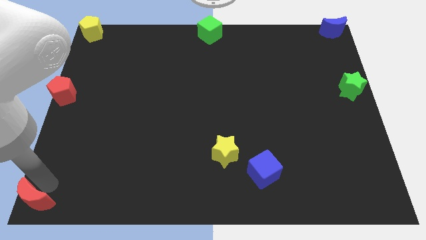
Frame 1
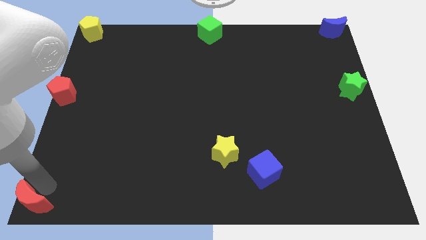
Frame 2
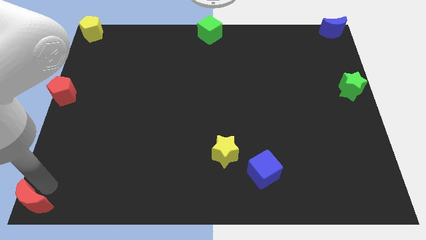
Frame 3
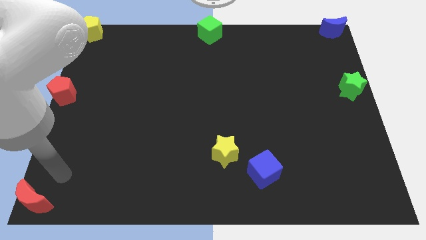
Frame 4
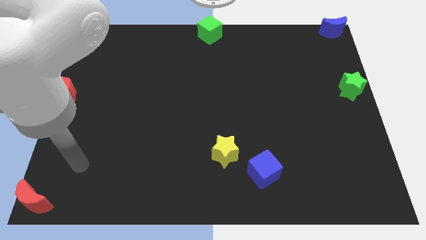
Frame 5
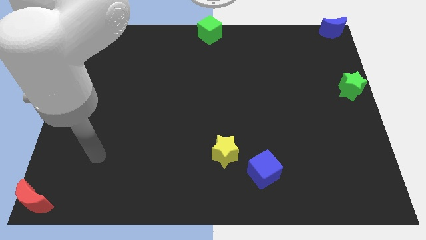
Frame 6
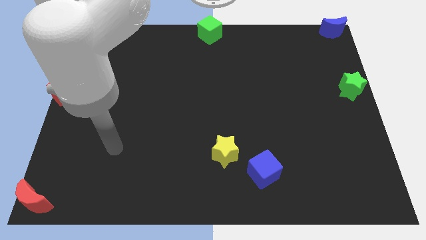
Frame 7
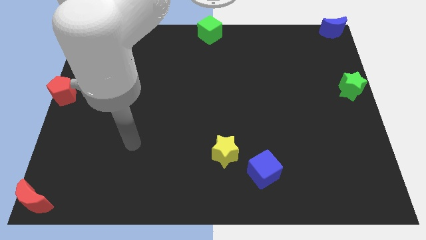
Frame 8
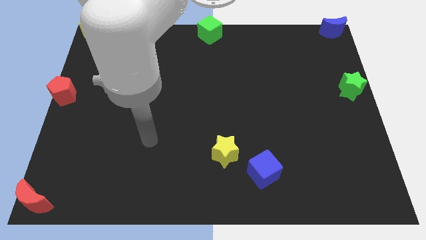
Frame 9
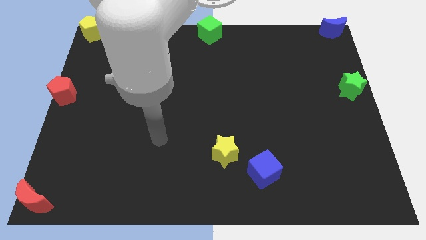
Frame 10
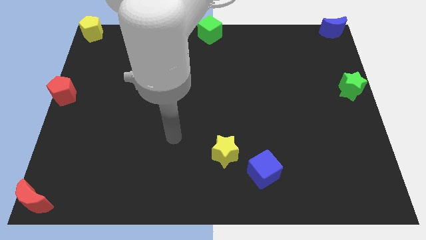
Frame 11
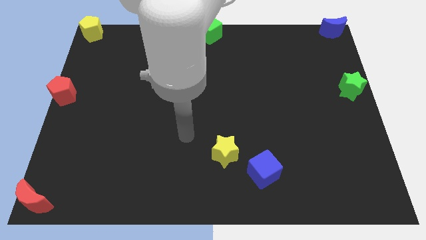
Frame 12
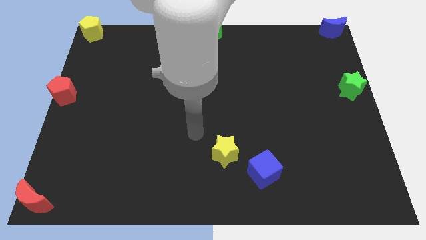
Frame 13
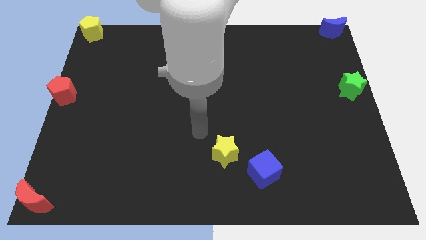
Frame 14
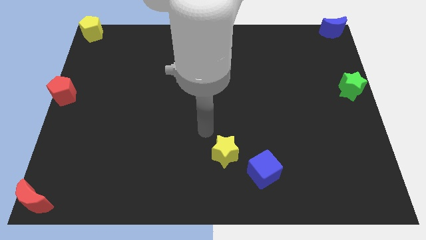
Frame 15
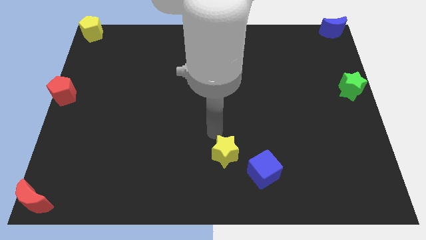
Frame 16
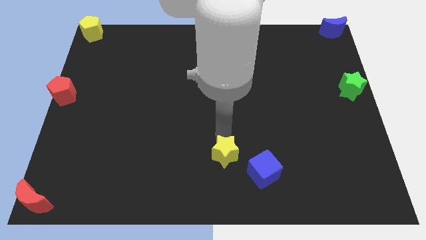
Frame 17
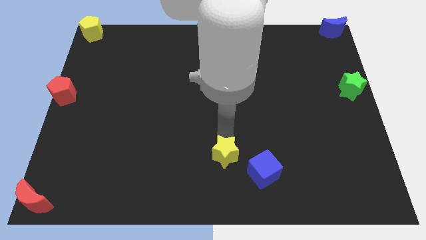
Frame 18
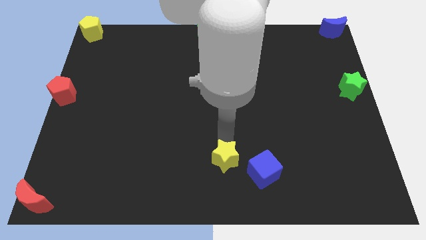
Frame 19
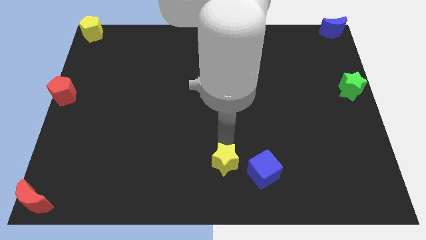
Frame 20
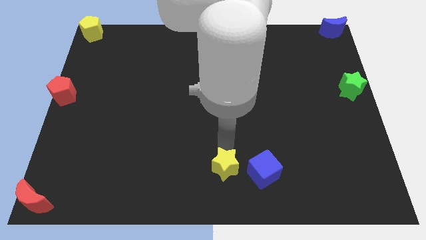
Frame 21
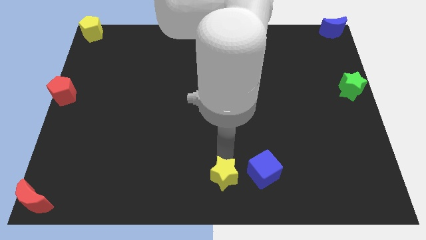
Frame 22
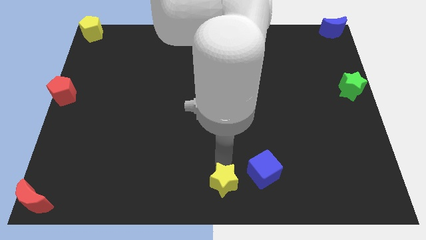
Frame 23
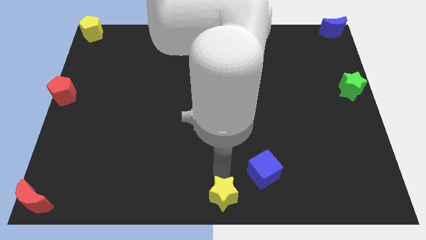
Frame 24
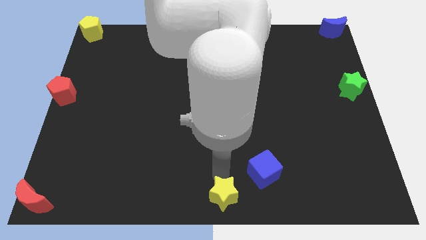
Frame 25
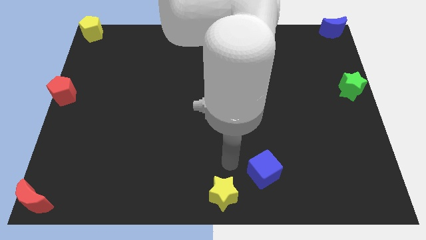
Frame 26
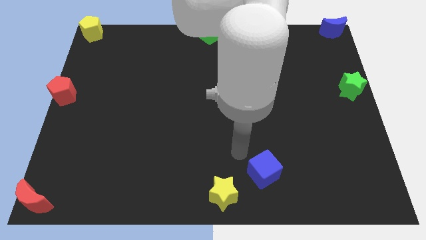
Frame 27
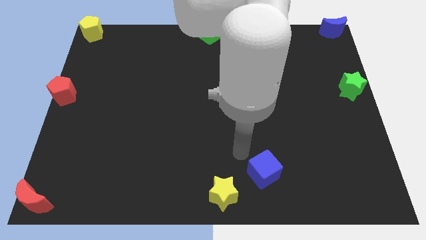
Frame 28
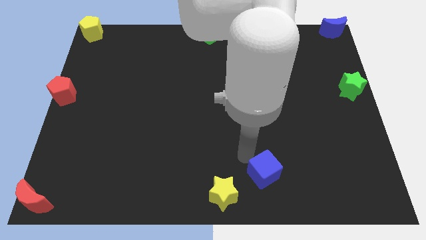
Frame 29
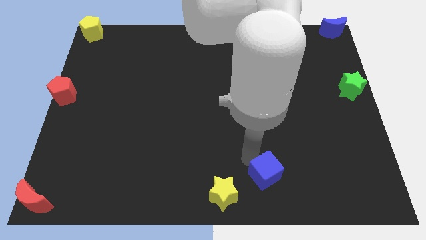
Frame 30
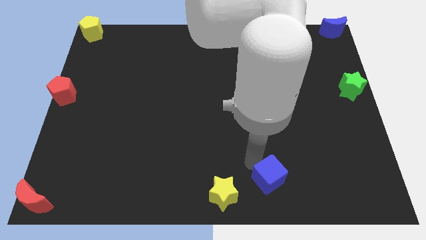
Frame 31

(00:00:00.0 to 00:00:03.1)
slide the yellow star to the bottom center of the board

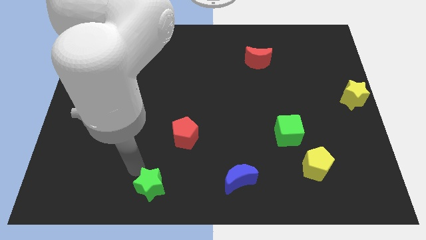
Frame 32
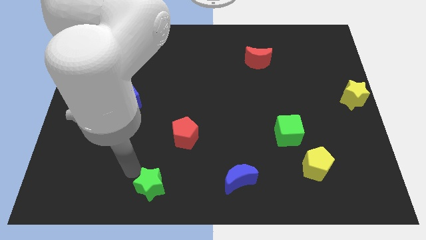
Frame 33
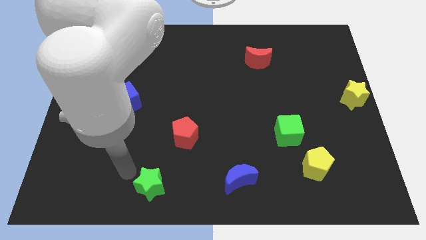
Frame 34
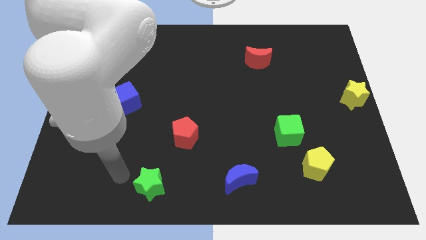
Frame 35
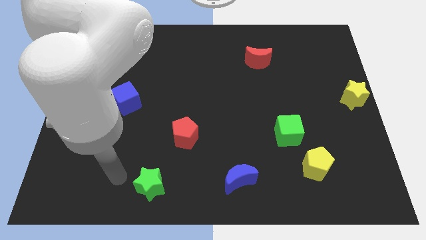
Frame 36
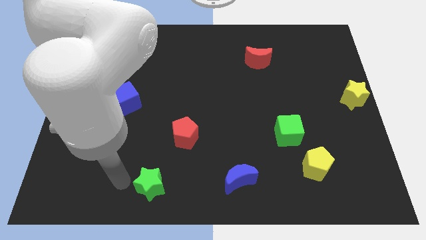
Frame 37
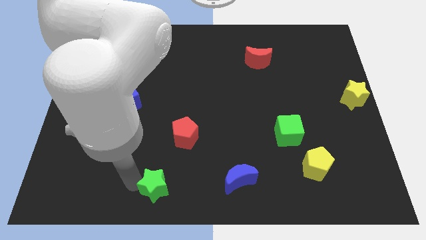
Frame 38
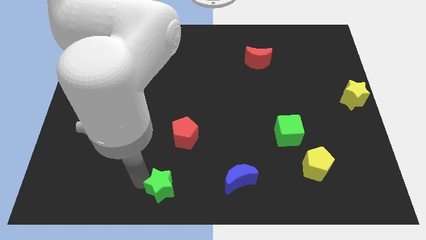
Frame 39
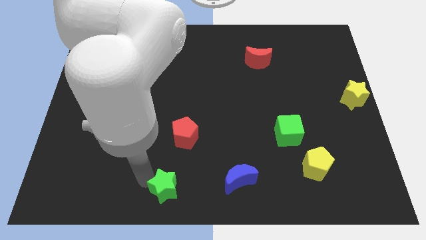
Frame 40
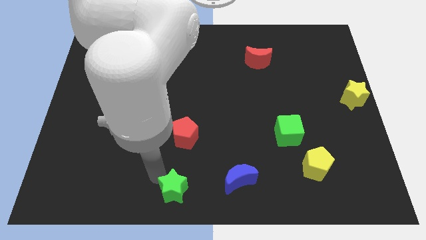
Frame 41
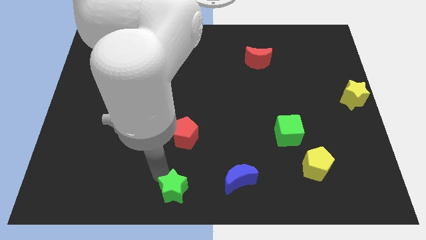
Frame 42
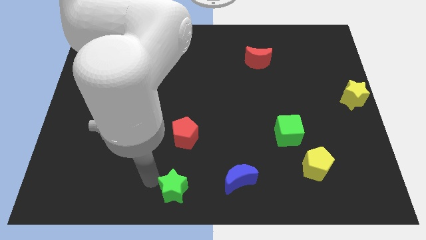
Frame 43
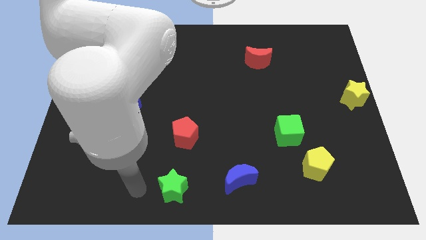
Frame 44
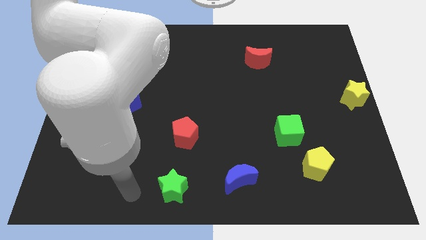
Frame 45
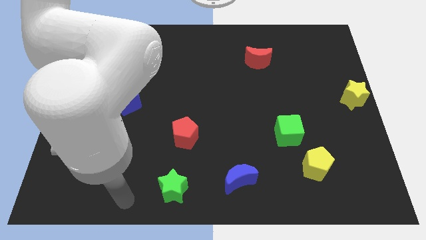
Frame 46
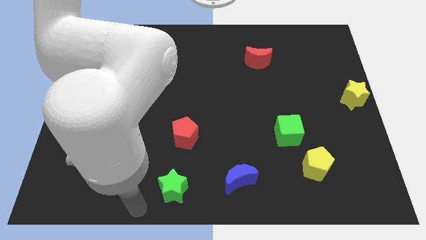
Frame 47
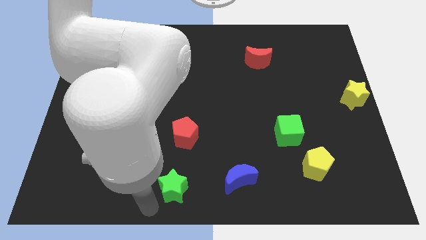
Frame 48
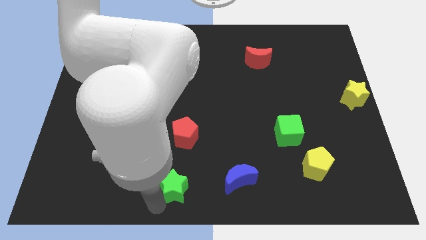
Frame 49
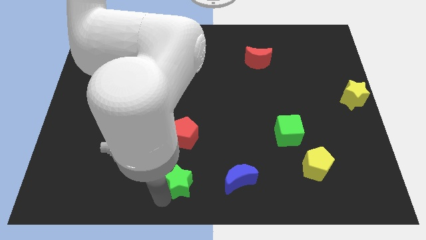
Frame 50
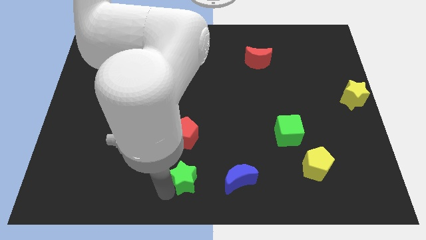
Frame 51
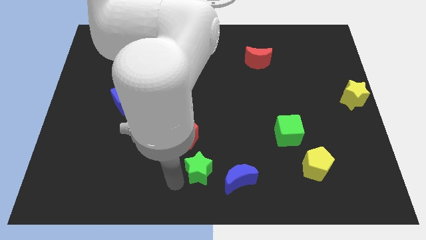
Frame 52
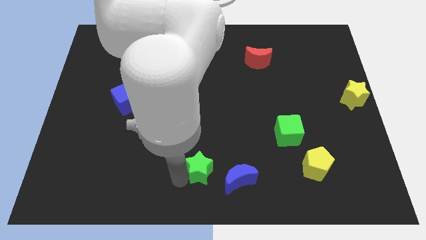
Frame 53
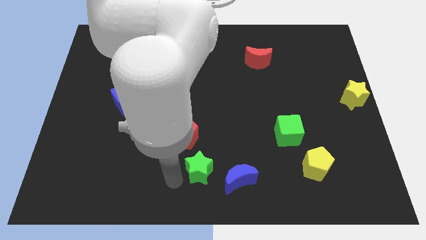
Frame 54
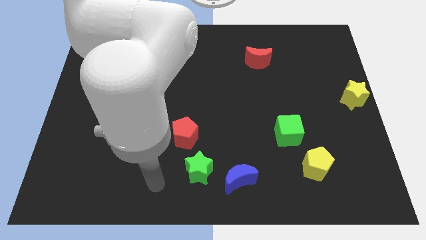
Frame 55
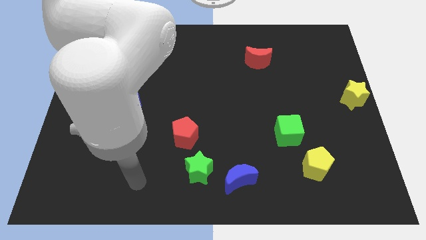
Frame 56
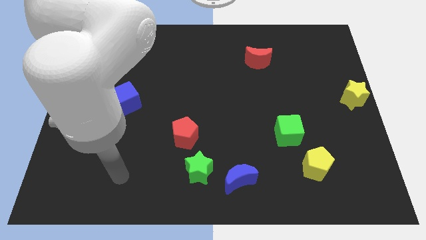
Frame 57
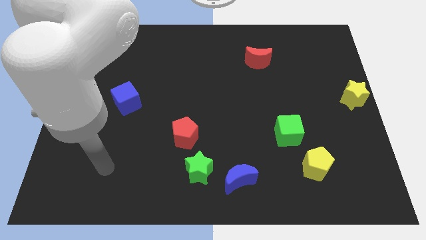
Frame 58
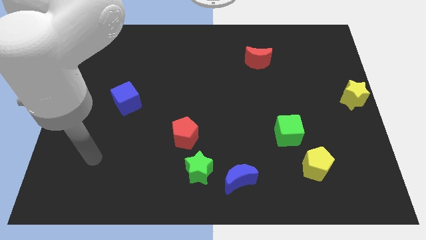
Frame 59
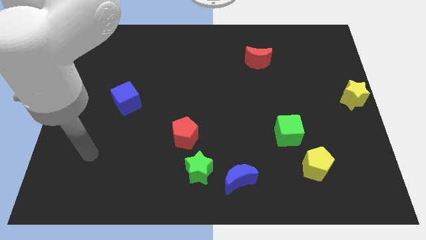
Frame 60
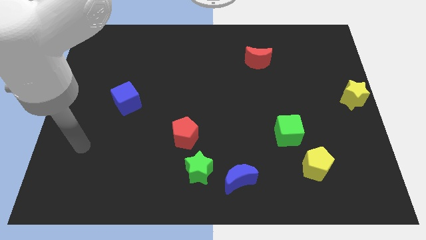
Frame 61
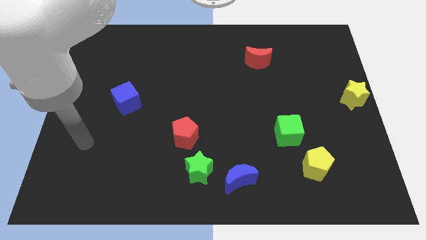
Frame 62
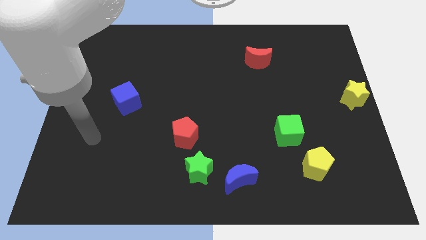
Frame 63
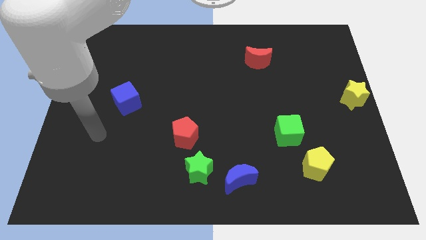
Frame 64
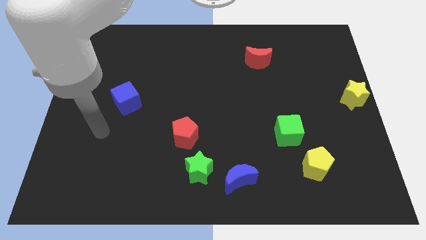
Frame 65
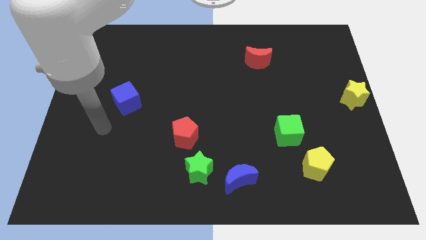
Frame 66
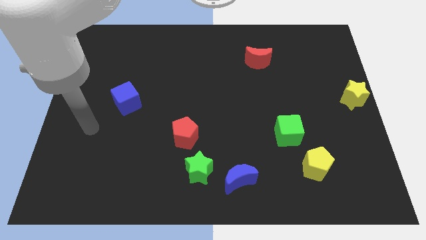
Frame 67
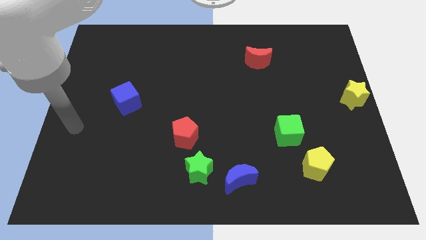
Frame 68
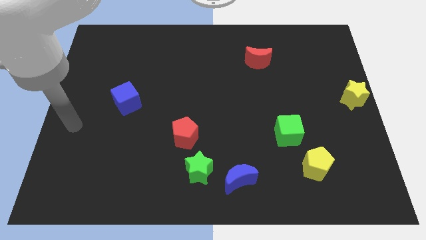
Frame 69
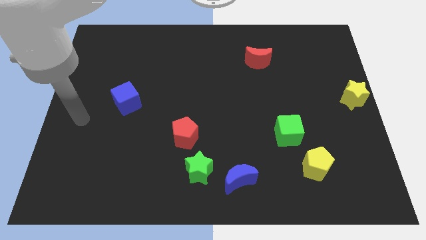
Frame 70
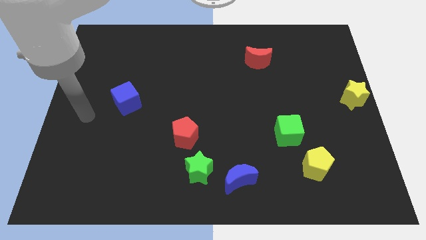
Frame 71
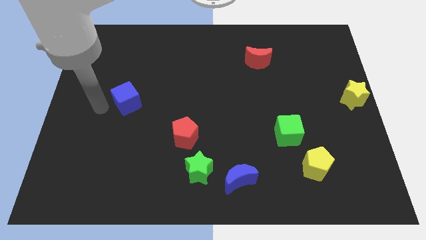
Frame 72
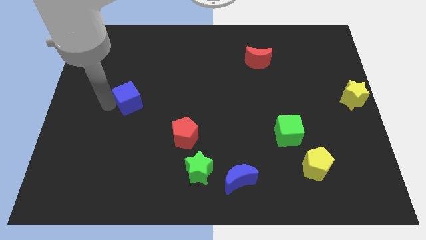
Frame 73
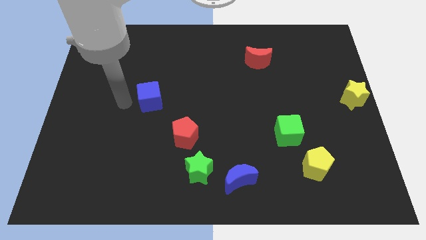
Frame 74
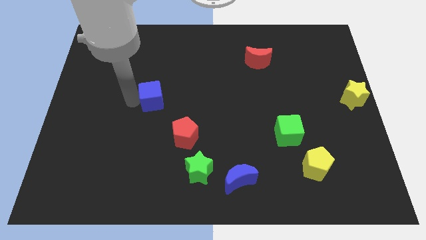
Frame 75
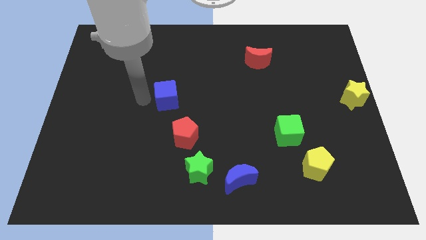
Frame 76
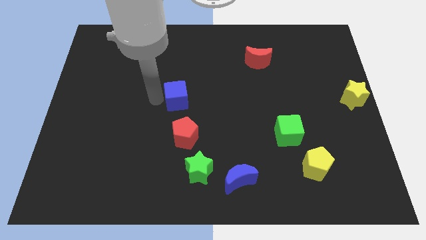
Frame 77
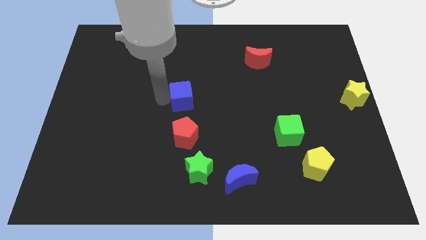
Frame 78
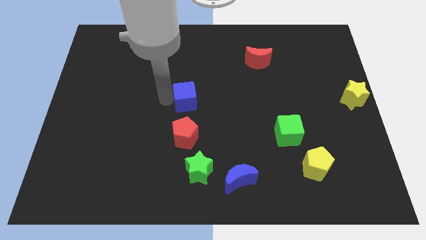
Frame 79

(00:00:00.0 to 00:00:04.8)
place the green star underneath the red pentagon

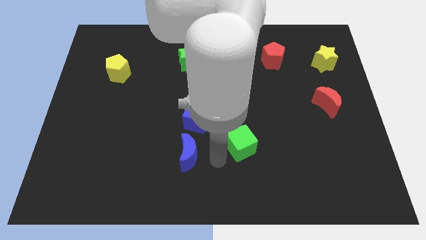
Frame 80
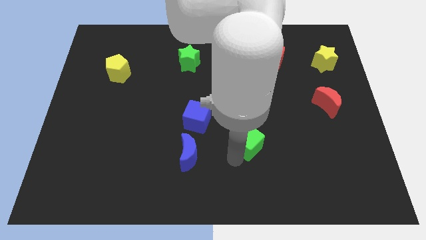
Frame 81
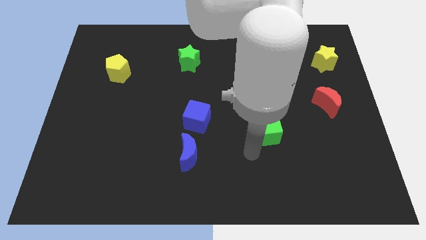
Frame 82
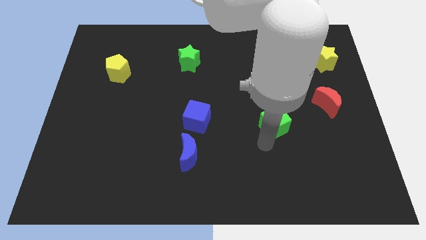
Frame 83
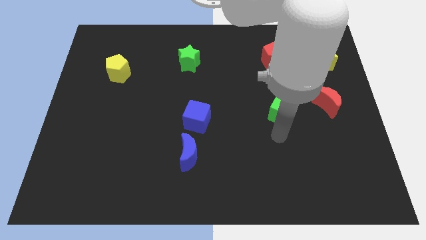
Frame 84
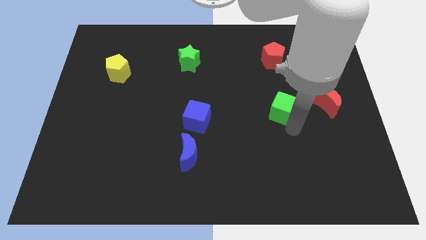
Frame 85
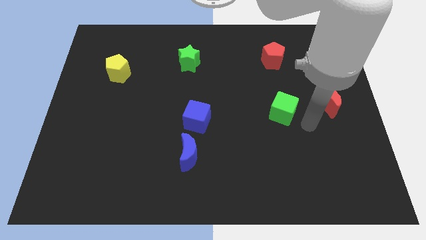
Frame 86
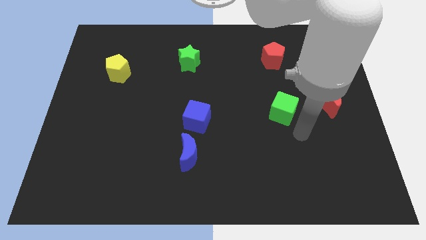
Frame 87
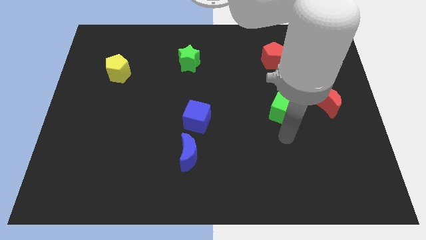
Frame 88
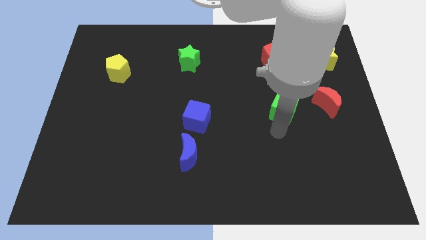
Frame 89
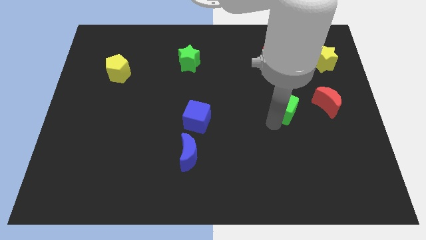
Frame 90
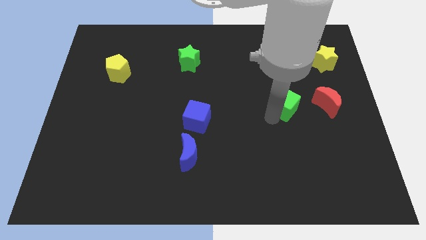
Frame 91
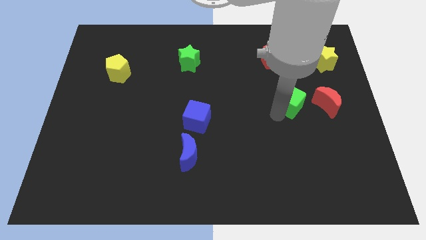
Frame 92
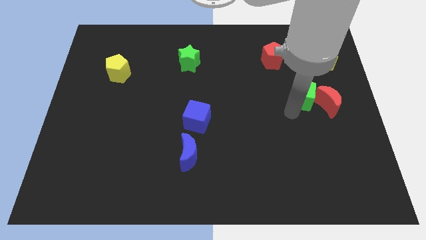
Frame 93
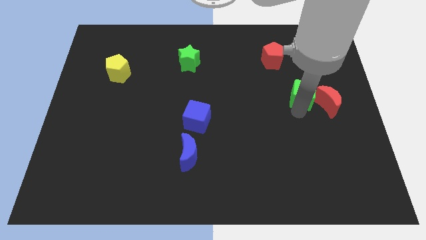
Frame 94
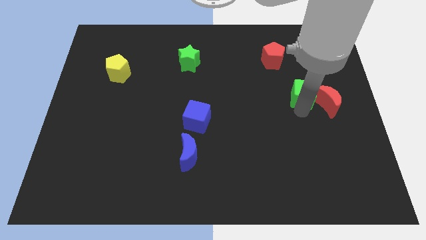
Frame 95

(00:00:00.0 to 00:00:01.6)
push the green cube into red crescent
